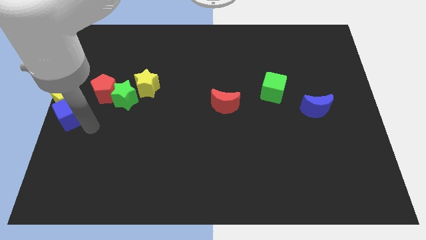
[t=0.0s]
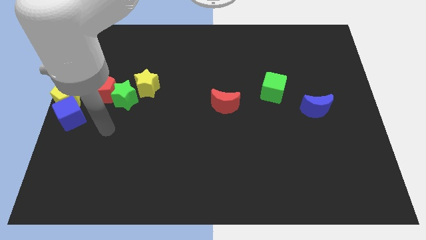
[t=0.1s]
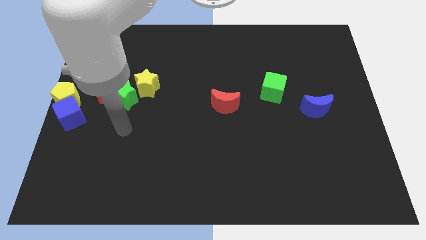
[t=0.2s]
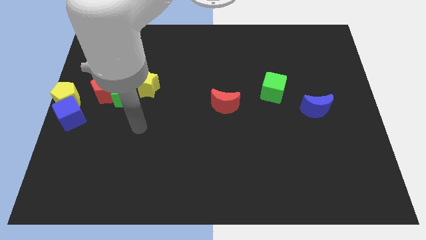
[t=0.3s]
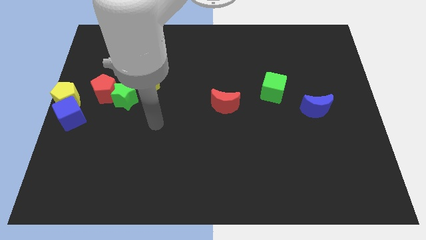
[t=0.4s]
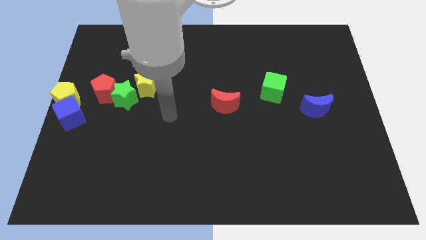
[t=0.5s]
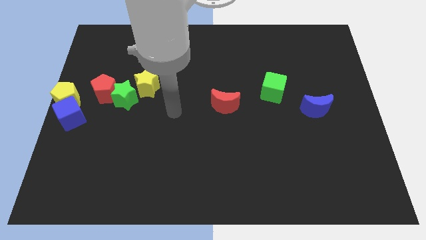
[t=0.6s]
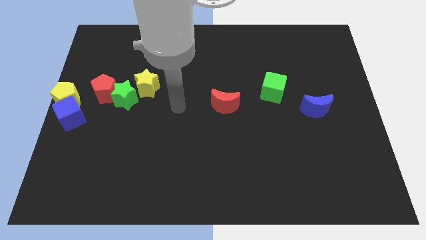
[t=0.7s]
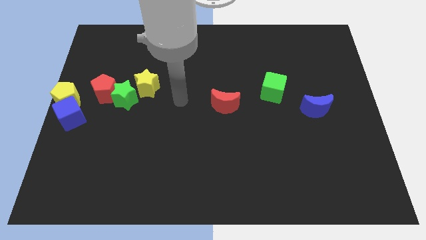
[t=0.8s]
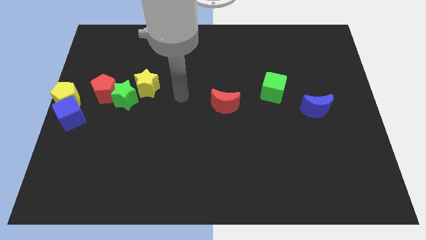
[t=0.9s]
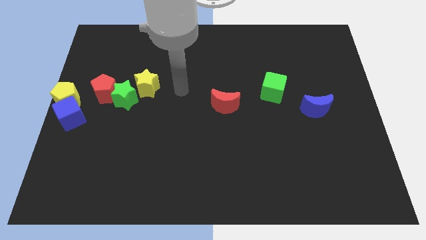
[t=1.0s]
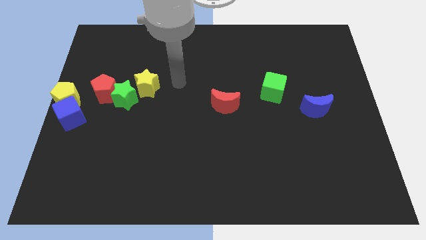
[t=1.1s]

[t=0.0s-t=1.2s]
place the arm at the right side of the yellow star

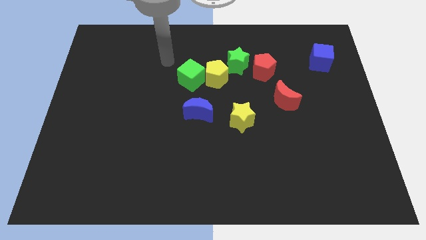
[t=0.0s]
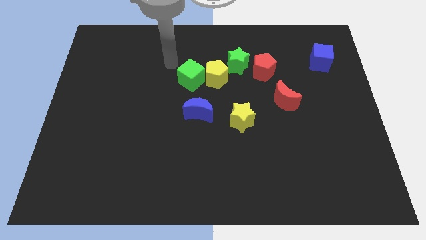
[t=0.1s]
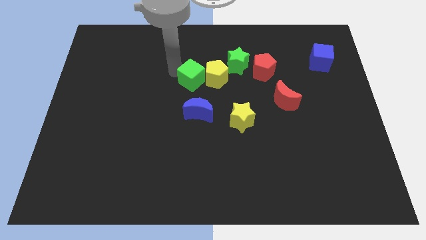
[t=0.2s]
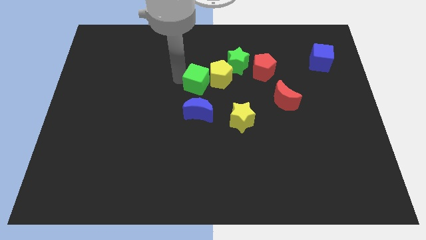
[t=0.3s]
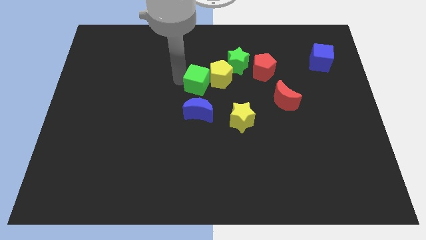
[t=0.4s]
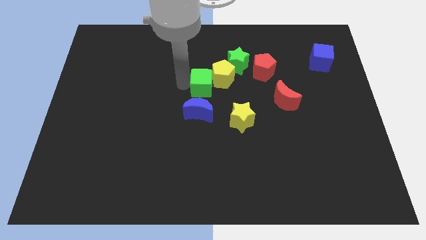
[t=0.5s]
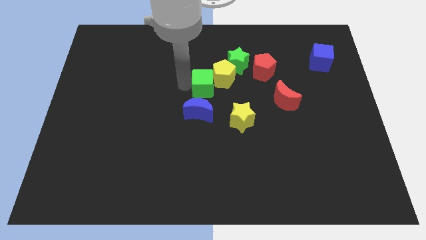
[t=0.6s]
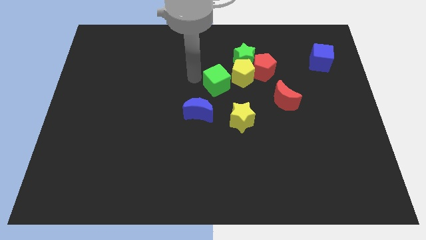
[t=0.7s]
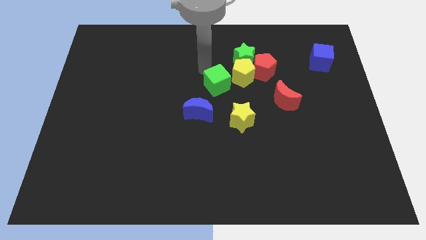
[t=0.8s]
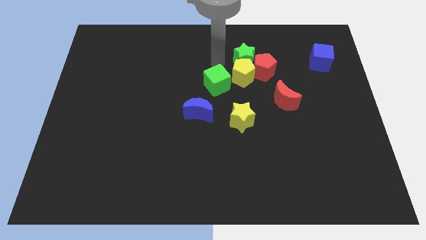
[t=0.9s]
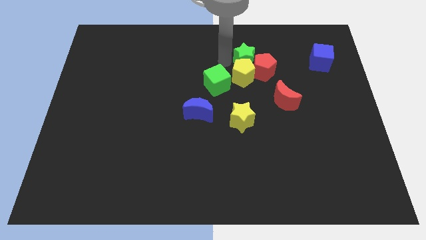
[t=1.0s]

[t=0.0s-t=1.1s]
push the green cube to the right side of the board

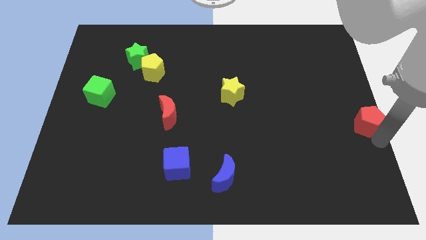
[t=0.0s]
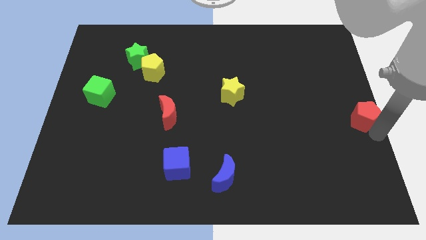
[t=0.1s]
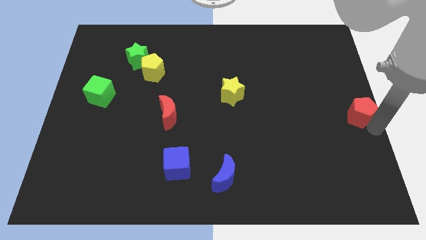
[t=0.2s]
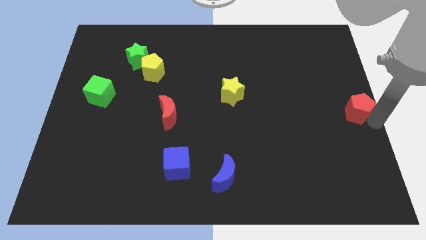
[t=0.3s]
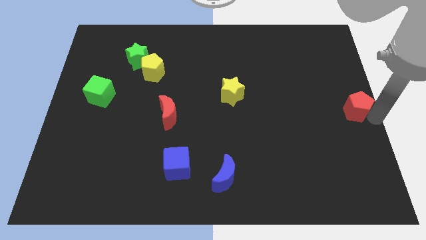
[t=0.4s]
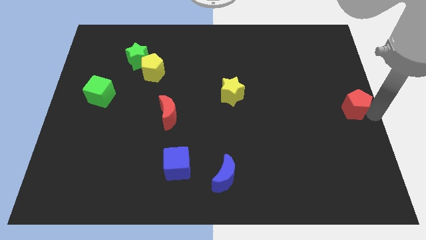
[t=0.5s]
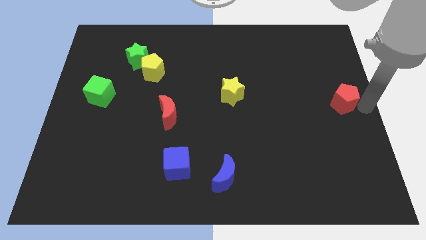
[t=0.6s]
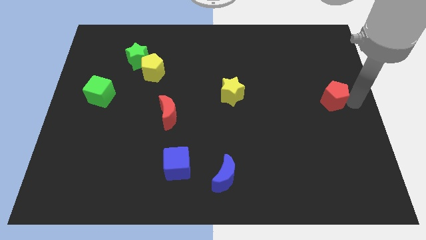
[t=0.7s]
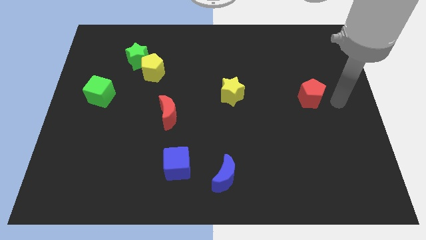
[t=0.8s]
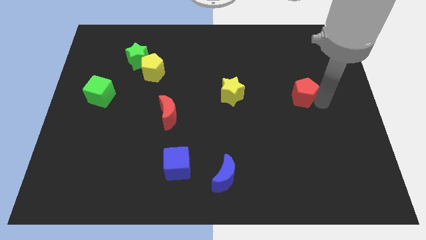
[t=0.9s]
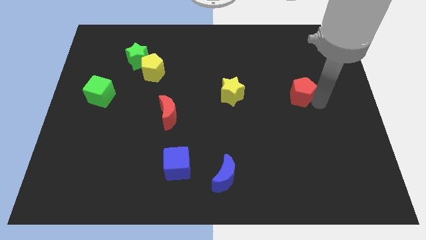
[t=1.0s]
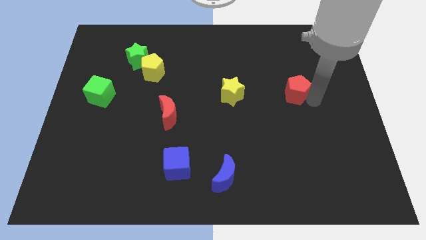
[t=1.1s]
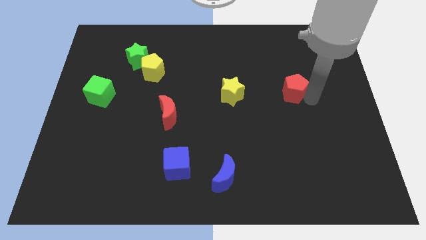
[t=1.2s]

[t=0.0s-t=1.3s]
push the red pentagon to the right of the yellow star

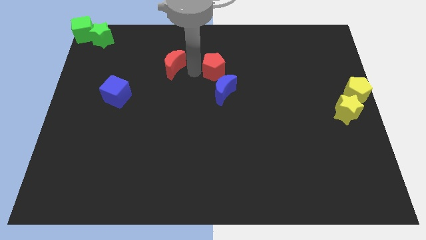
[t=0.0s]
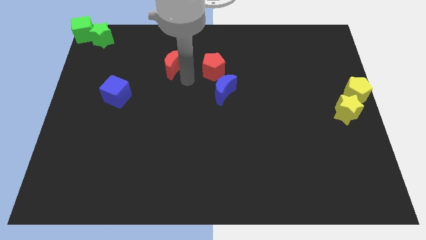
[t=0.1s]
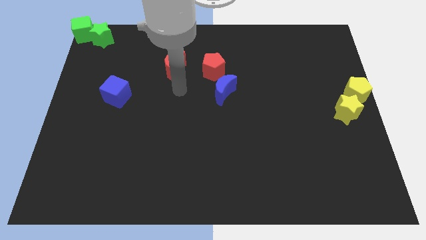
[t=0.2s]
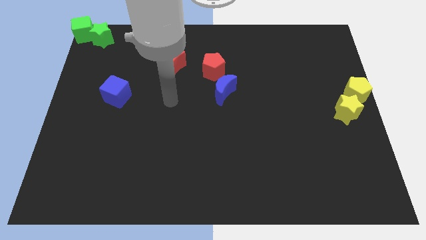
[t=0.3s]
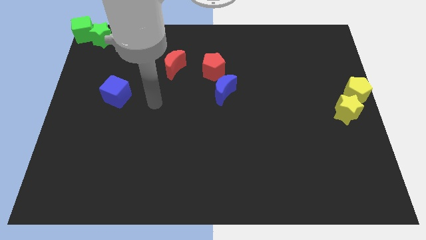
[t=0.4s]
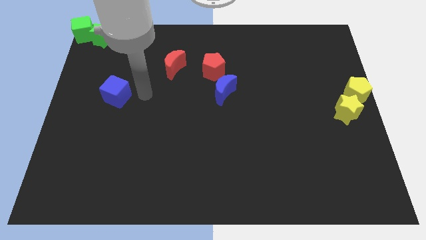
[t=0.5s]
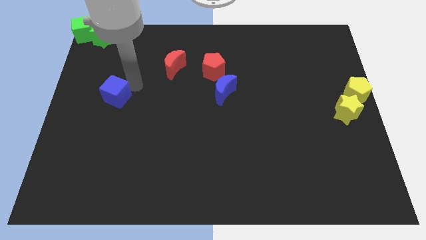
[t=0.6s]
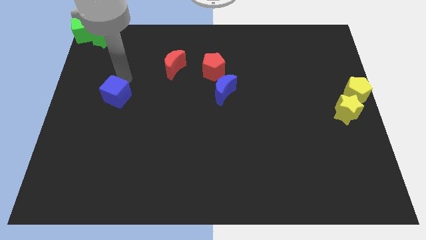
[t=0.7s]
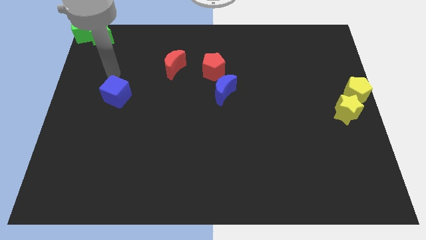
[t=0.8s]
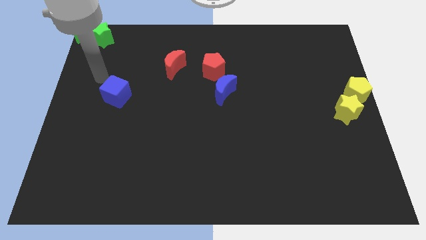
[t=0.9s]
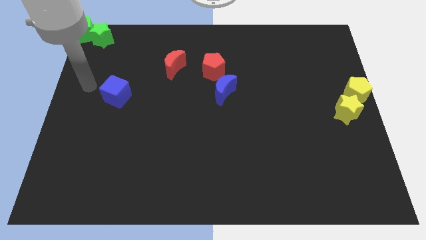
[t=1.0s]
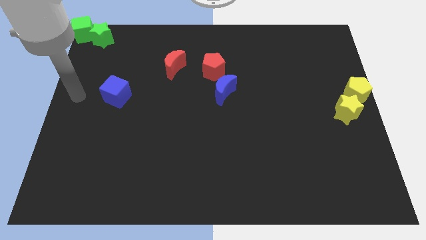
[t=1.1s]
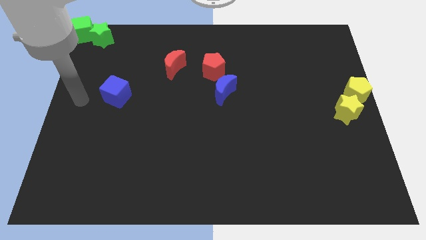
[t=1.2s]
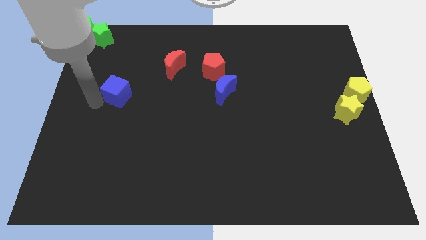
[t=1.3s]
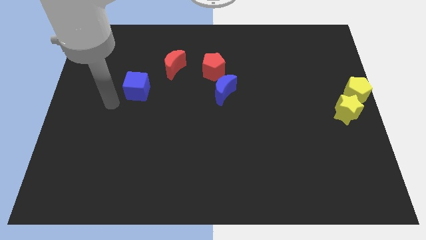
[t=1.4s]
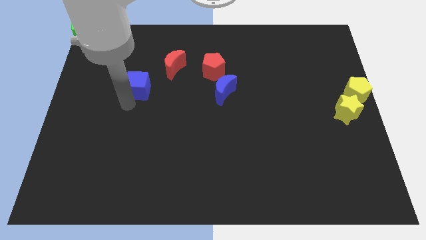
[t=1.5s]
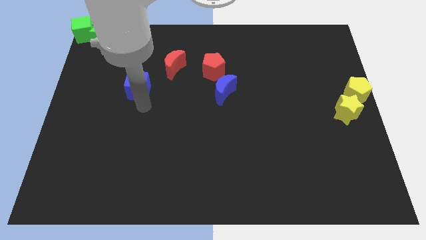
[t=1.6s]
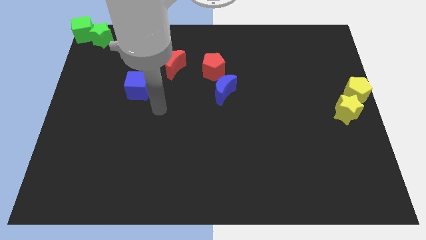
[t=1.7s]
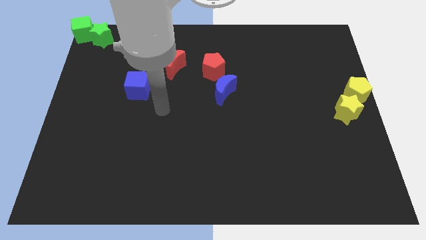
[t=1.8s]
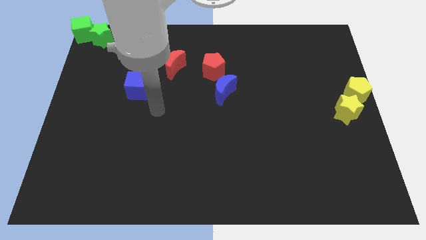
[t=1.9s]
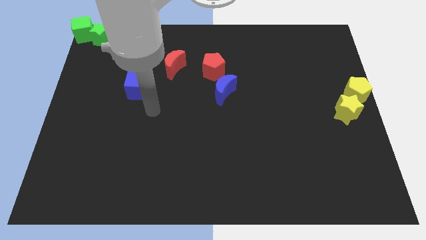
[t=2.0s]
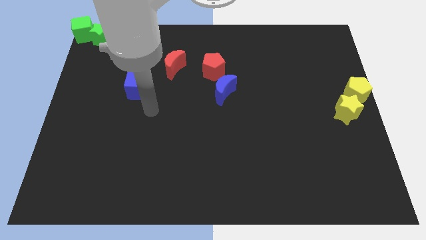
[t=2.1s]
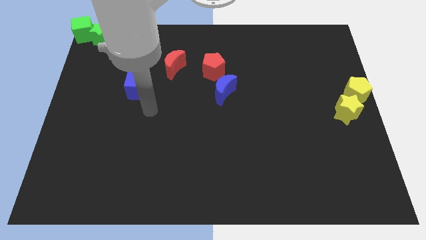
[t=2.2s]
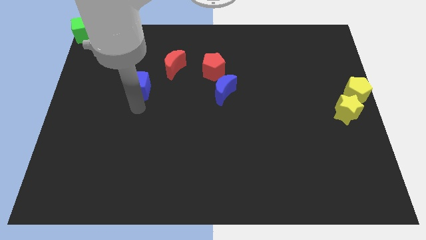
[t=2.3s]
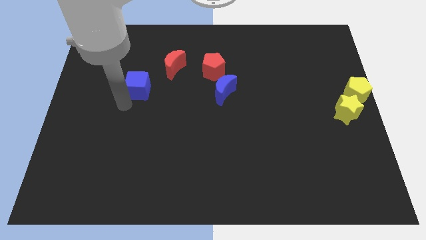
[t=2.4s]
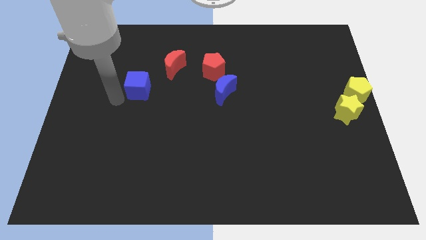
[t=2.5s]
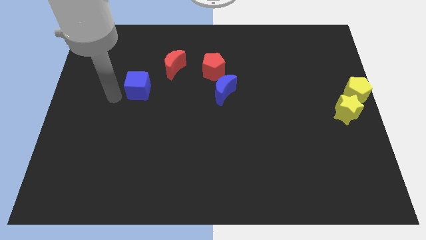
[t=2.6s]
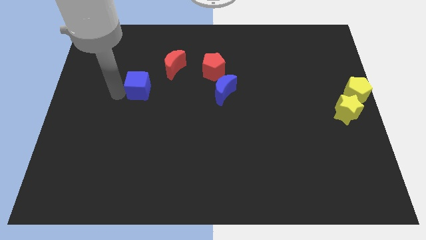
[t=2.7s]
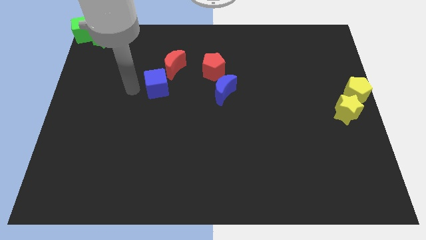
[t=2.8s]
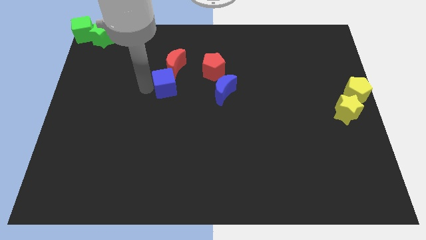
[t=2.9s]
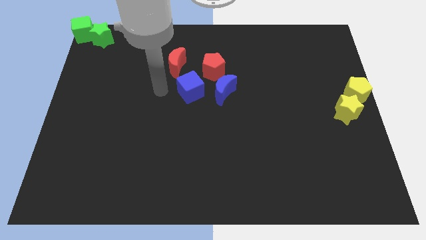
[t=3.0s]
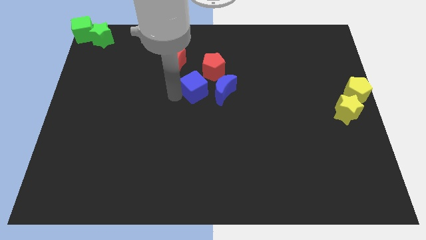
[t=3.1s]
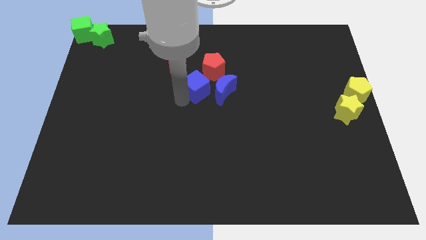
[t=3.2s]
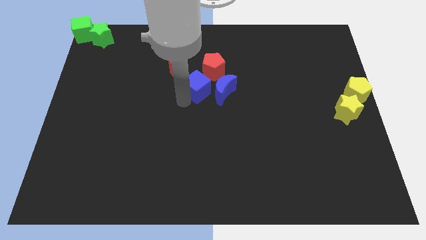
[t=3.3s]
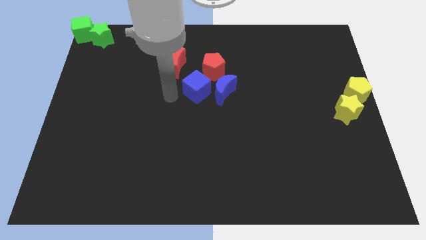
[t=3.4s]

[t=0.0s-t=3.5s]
slide the blue cube to the left side of the blue crescent

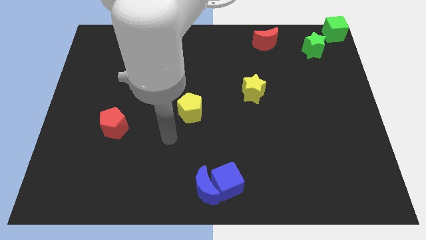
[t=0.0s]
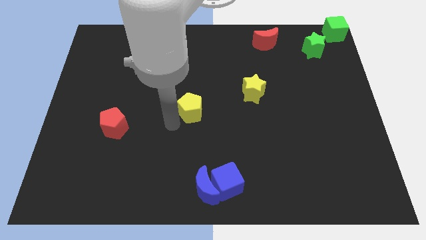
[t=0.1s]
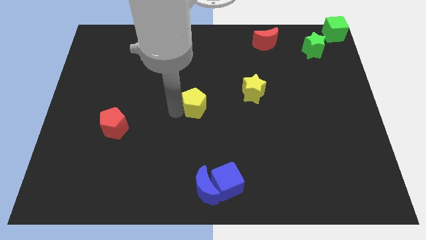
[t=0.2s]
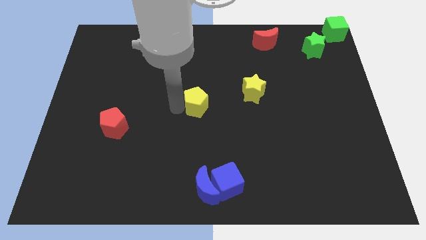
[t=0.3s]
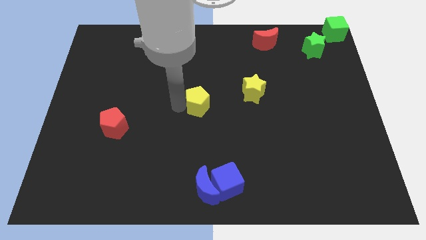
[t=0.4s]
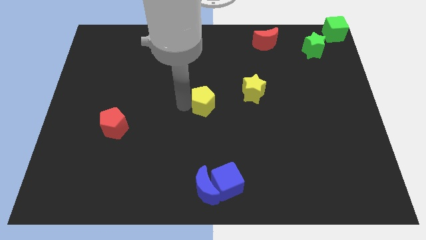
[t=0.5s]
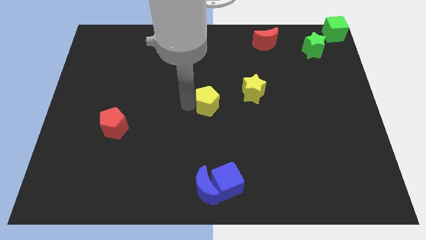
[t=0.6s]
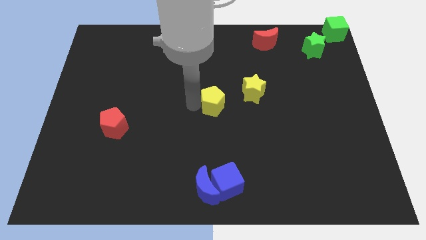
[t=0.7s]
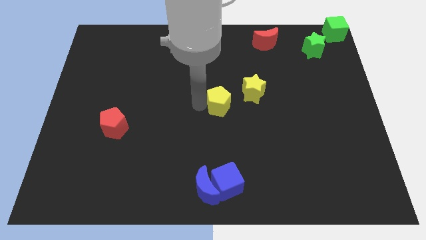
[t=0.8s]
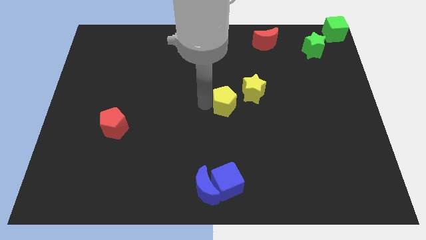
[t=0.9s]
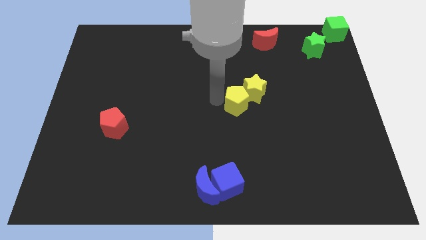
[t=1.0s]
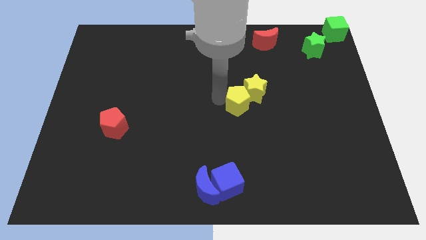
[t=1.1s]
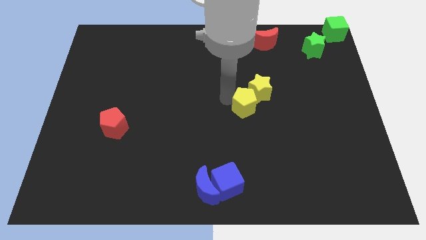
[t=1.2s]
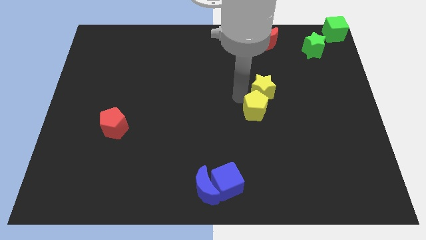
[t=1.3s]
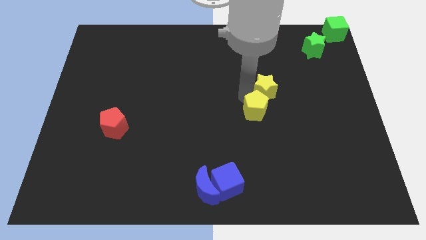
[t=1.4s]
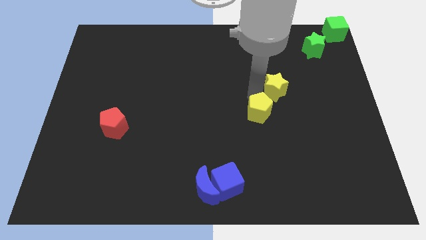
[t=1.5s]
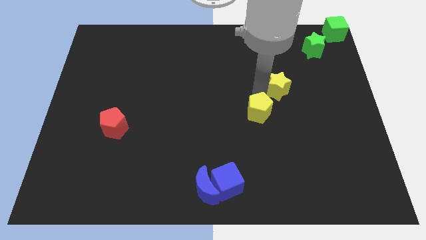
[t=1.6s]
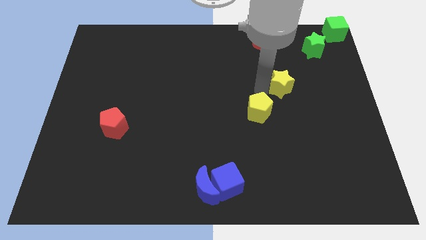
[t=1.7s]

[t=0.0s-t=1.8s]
move the yellow pentagon along with yellow star

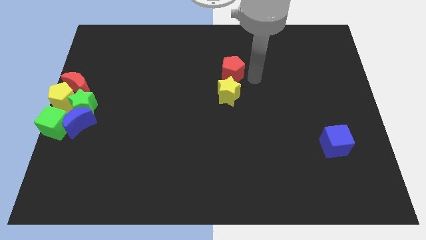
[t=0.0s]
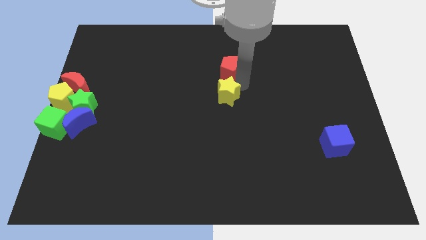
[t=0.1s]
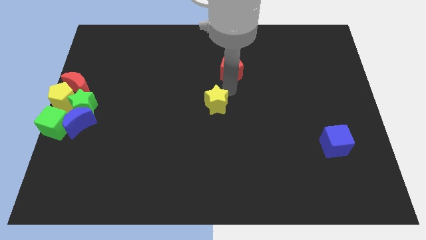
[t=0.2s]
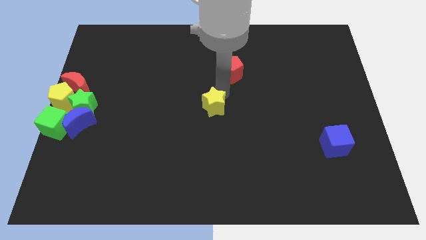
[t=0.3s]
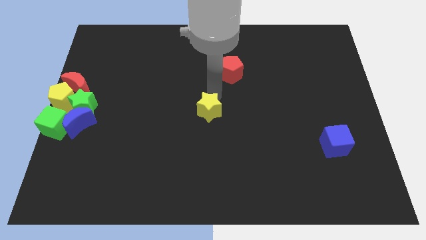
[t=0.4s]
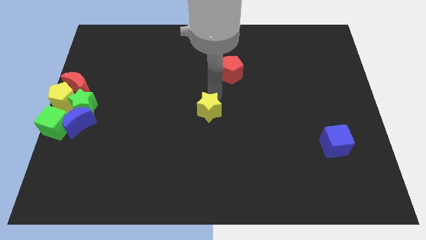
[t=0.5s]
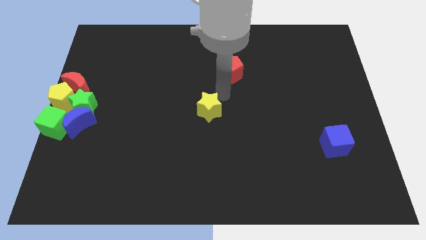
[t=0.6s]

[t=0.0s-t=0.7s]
separate the yellow star and the red pentagon
